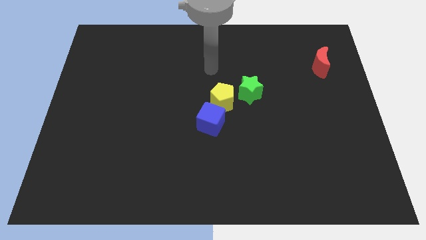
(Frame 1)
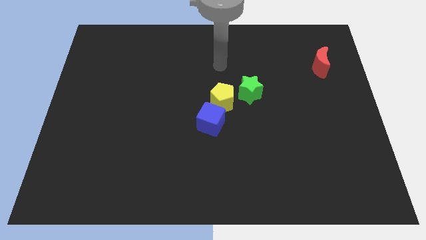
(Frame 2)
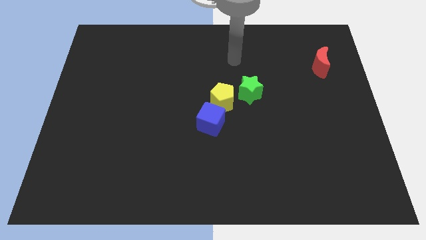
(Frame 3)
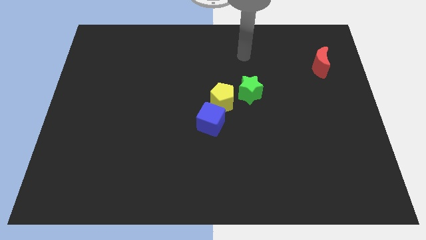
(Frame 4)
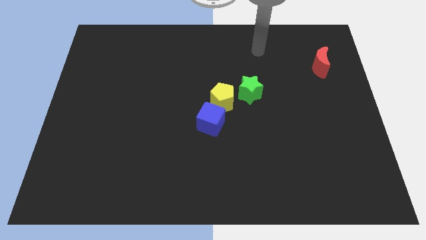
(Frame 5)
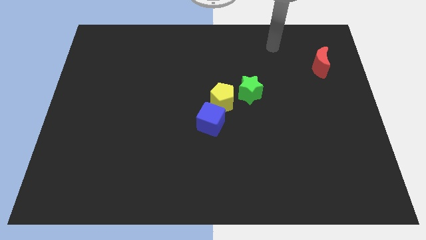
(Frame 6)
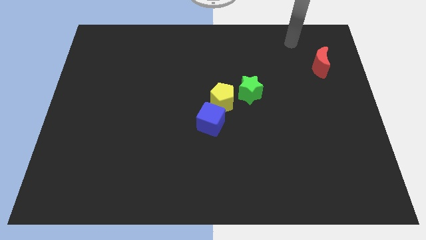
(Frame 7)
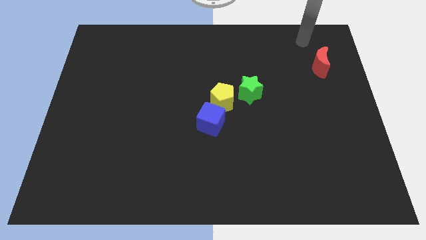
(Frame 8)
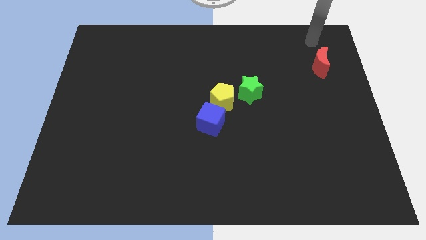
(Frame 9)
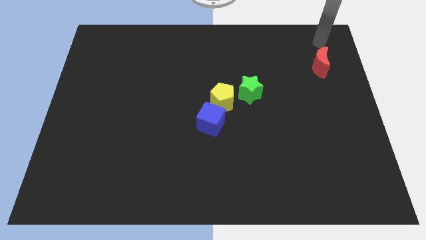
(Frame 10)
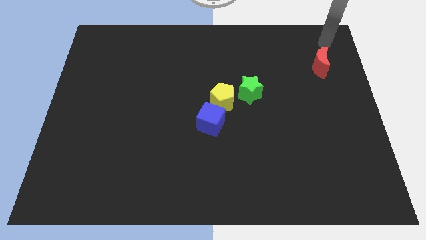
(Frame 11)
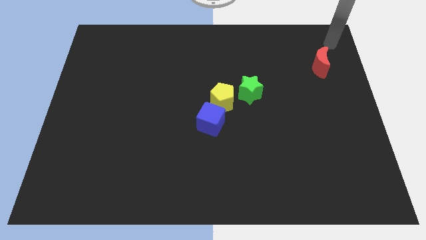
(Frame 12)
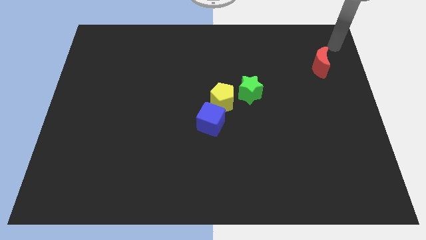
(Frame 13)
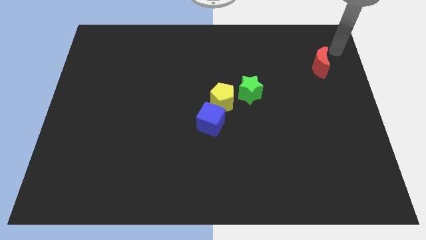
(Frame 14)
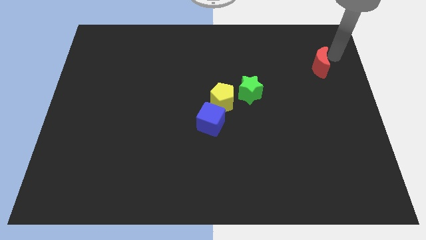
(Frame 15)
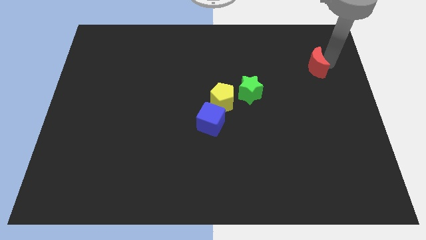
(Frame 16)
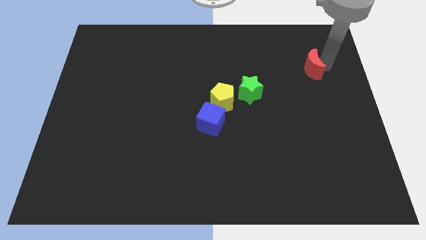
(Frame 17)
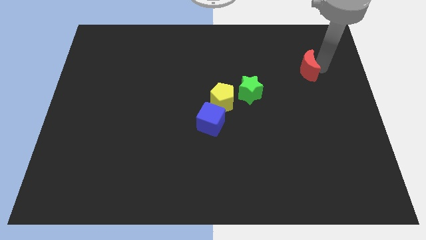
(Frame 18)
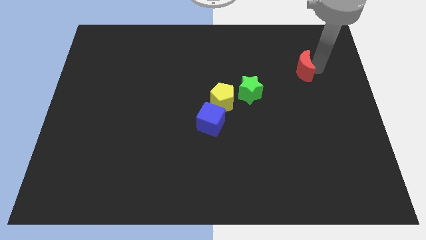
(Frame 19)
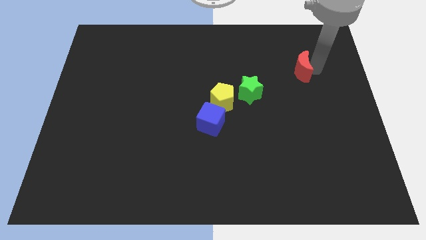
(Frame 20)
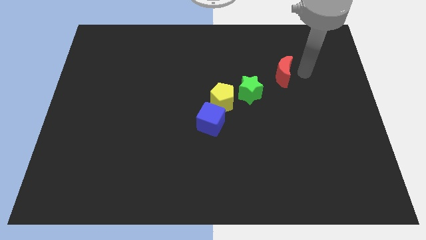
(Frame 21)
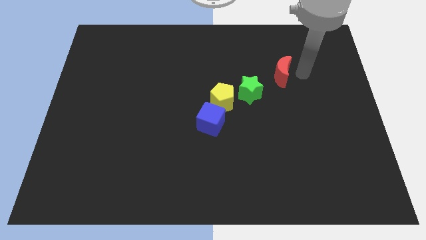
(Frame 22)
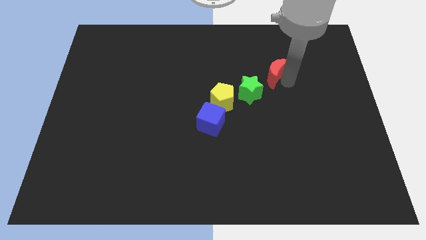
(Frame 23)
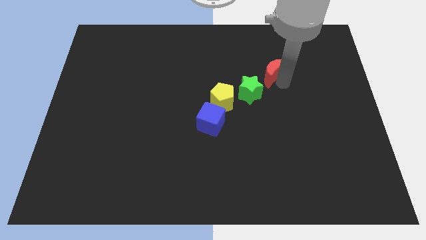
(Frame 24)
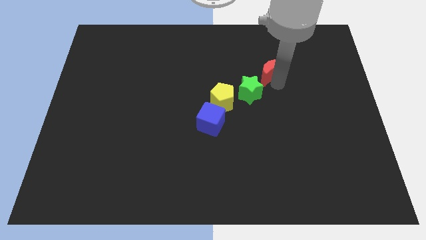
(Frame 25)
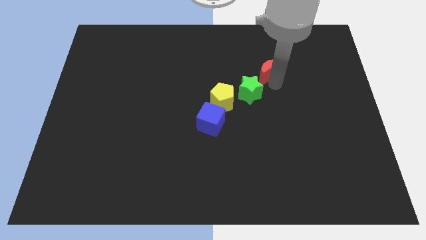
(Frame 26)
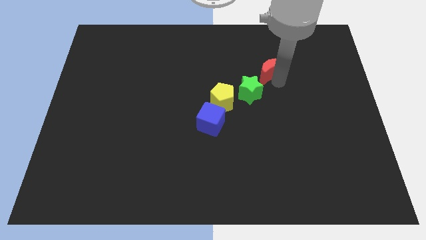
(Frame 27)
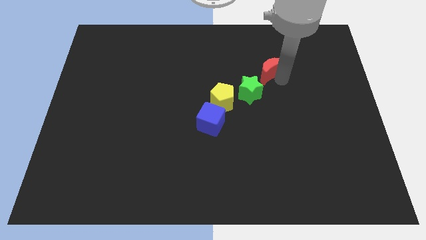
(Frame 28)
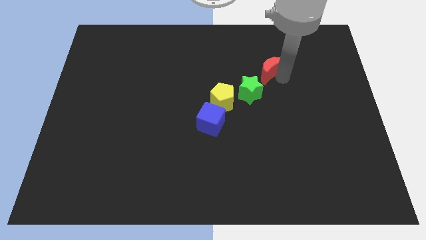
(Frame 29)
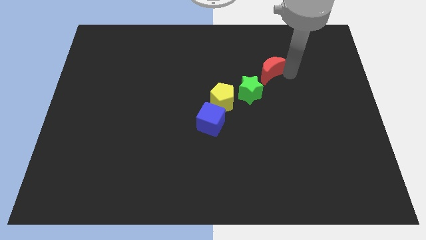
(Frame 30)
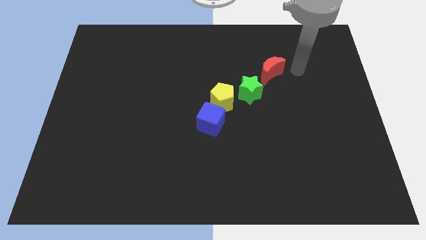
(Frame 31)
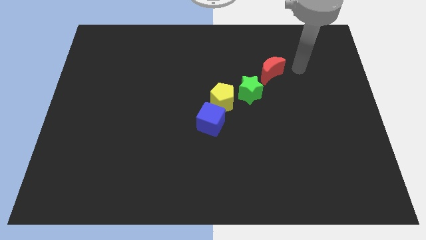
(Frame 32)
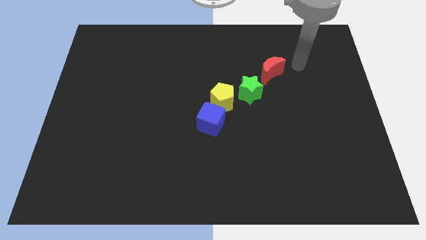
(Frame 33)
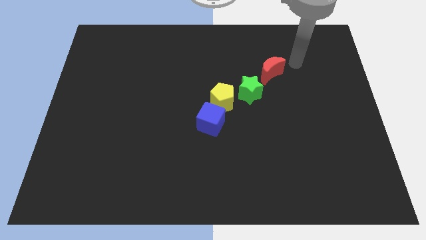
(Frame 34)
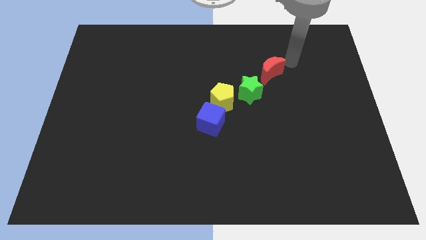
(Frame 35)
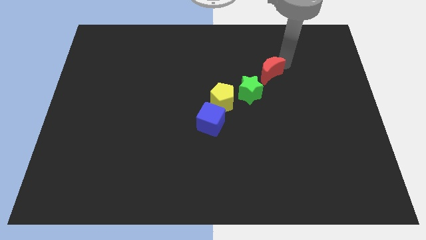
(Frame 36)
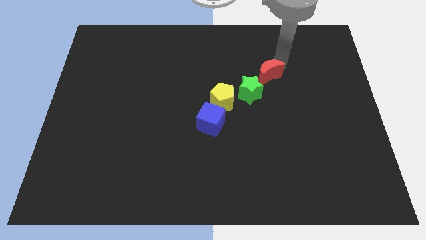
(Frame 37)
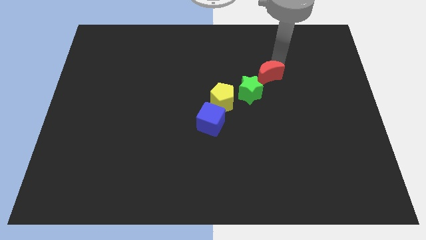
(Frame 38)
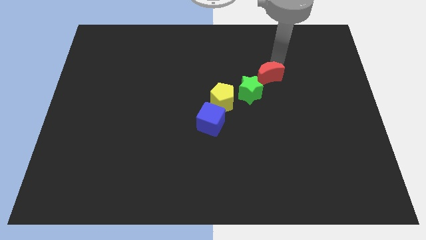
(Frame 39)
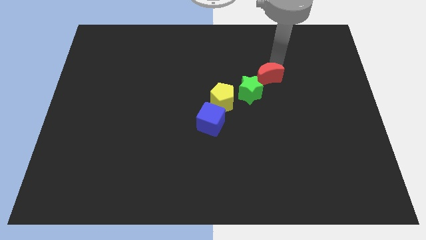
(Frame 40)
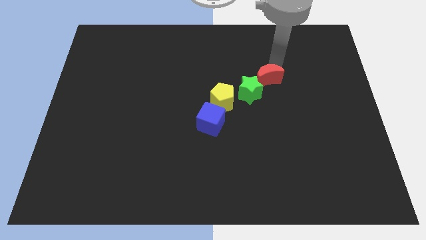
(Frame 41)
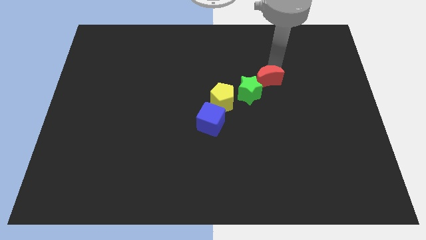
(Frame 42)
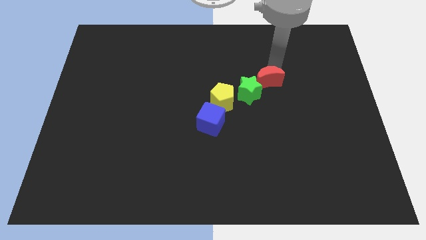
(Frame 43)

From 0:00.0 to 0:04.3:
slide the red moon to the green star

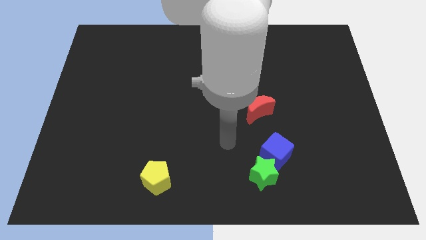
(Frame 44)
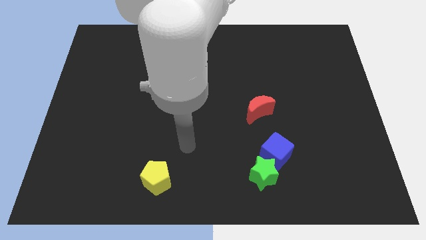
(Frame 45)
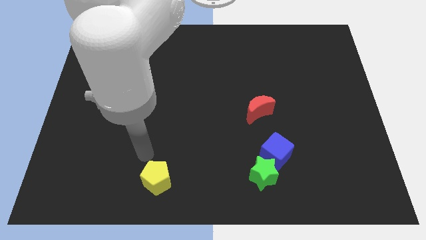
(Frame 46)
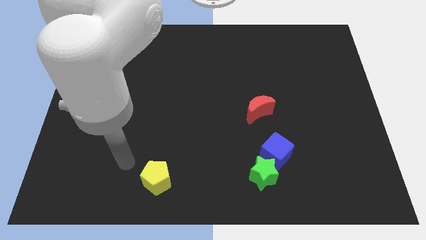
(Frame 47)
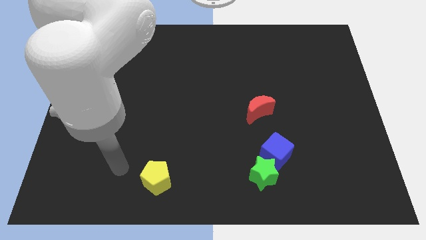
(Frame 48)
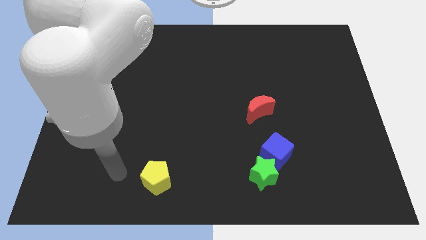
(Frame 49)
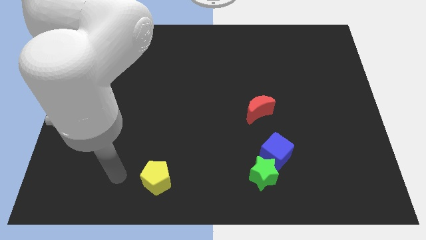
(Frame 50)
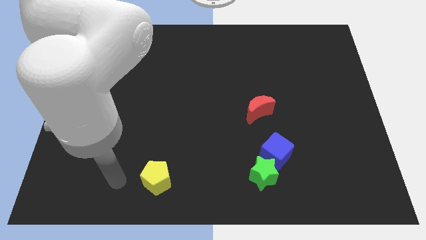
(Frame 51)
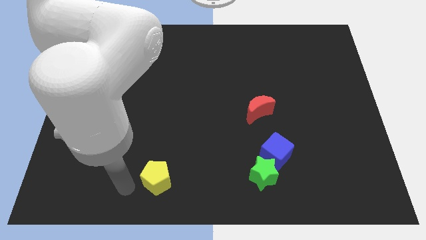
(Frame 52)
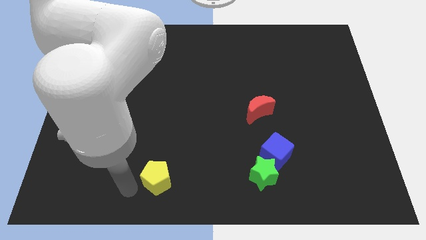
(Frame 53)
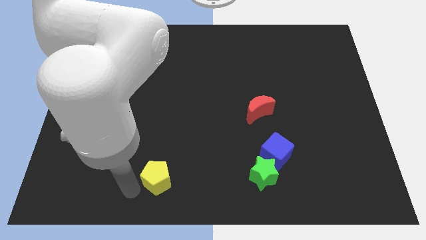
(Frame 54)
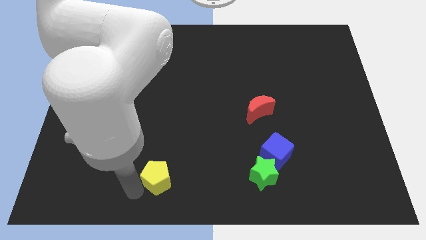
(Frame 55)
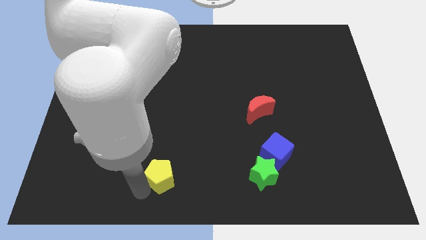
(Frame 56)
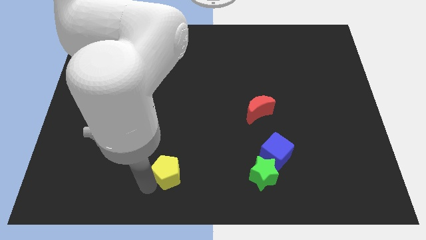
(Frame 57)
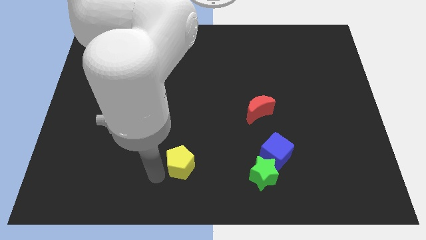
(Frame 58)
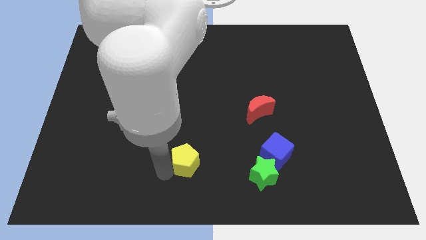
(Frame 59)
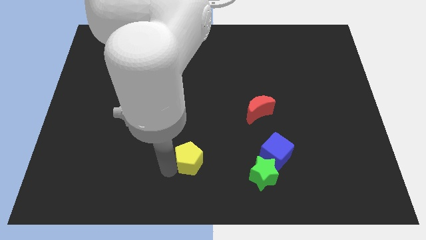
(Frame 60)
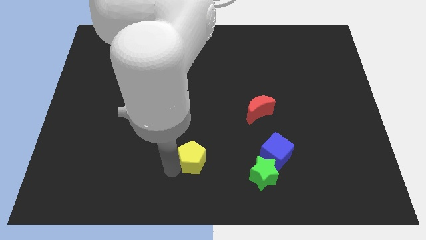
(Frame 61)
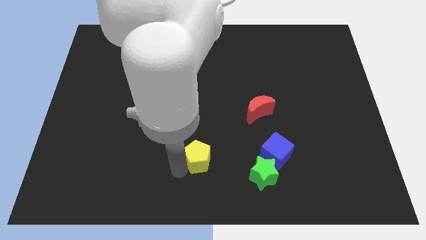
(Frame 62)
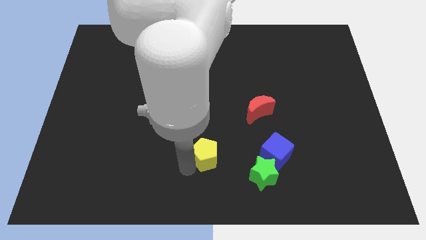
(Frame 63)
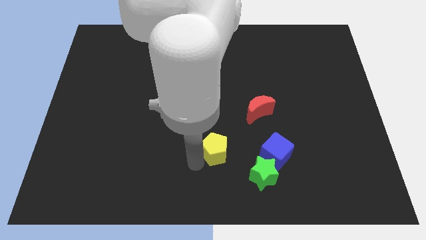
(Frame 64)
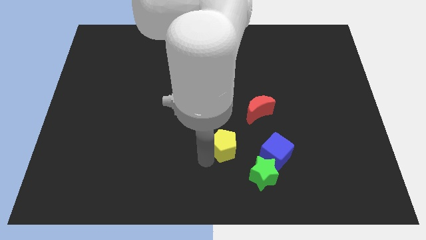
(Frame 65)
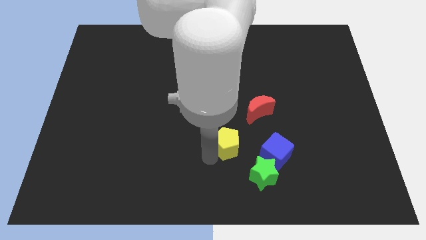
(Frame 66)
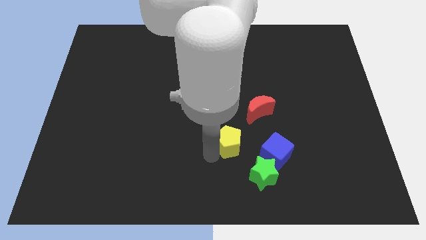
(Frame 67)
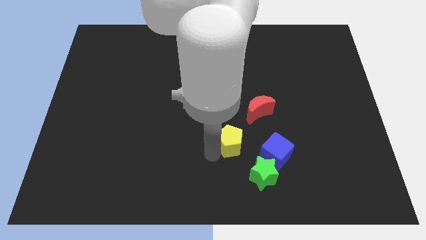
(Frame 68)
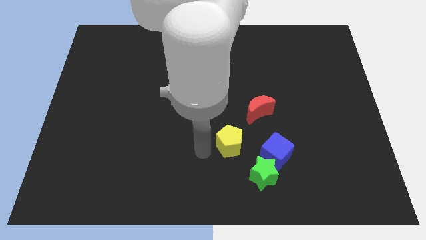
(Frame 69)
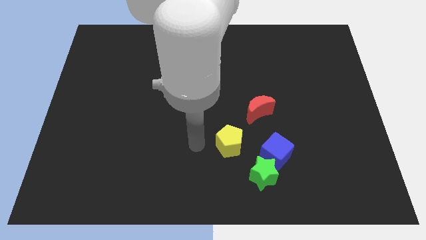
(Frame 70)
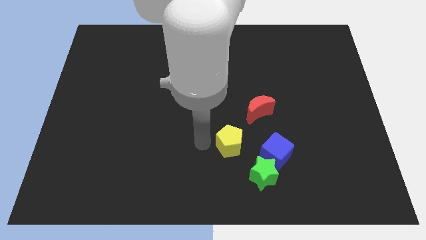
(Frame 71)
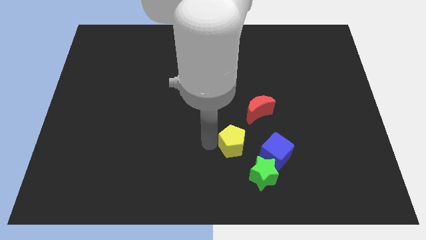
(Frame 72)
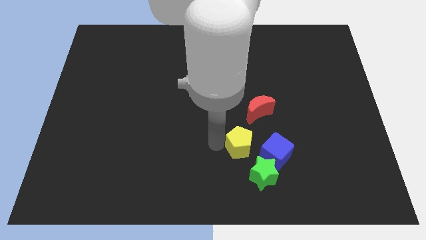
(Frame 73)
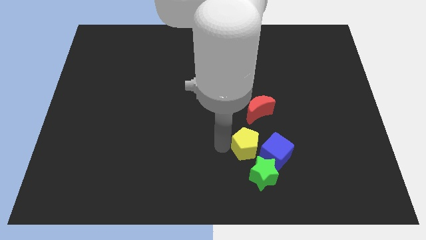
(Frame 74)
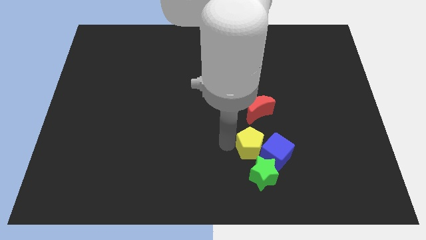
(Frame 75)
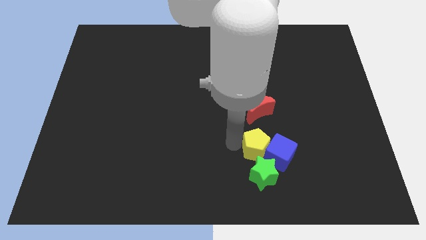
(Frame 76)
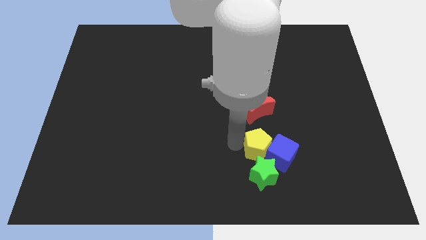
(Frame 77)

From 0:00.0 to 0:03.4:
slide the yellow block next to the blue block

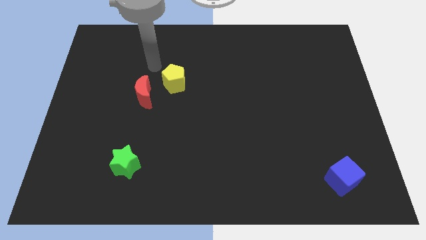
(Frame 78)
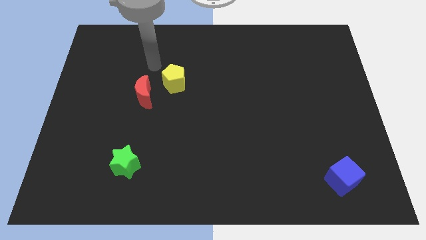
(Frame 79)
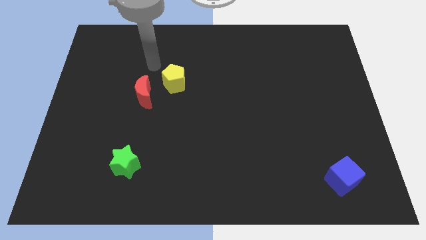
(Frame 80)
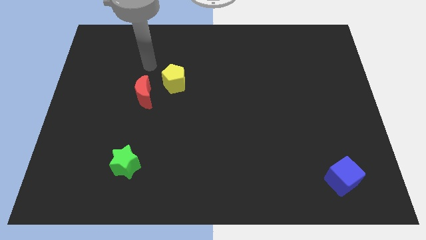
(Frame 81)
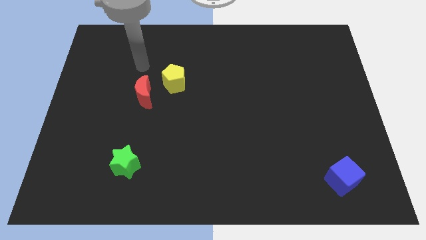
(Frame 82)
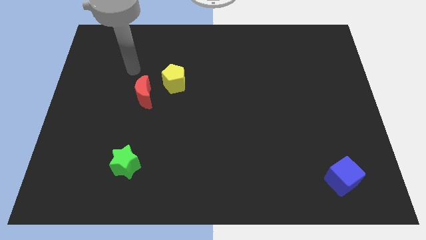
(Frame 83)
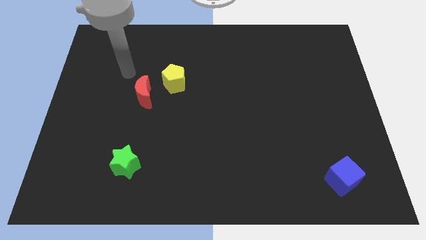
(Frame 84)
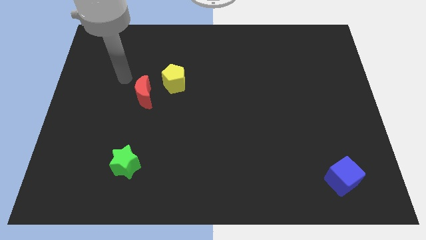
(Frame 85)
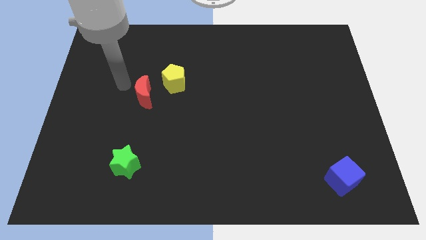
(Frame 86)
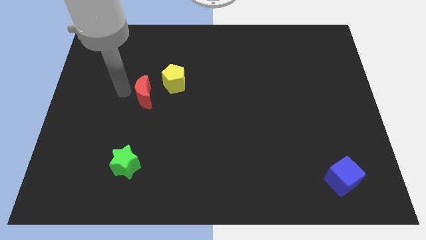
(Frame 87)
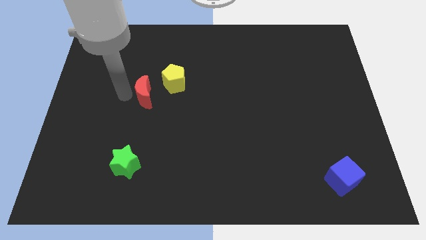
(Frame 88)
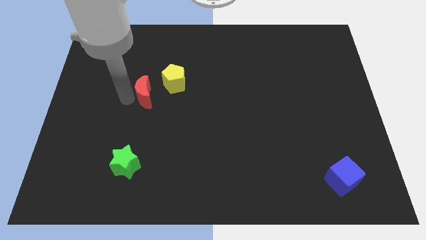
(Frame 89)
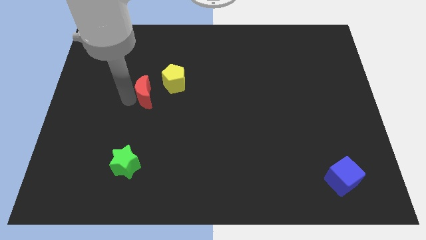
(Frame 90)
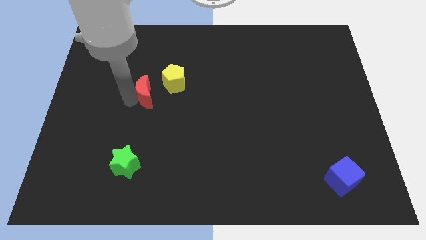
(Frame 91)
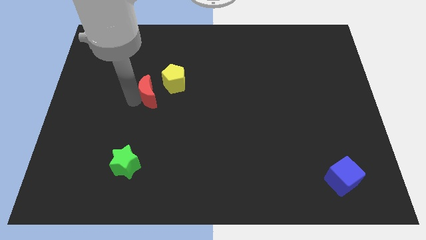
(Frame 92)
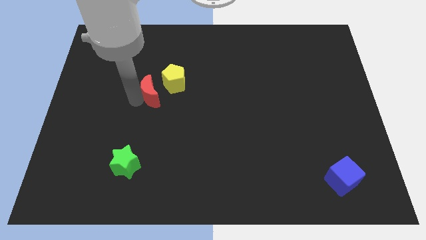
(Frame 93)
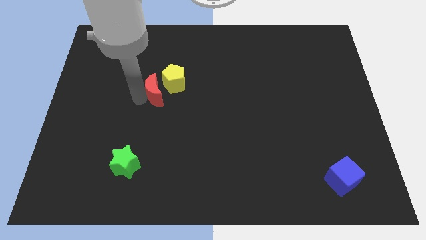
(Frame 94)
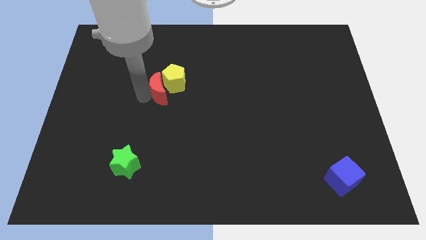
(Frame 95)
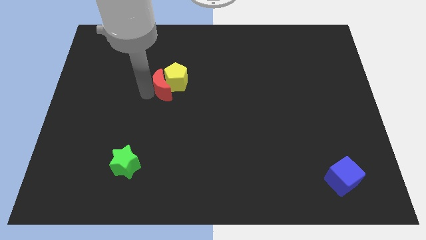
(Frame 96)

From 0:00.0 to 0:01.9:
push the moon to the yellow pentagon
